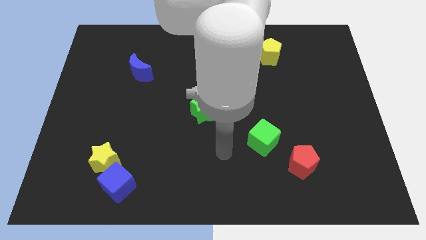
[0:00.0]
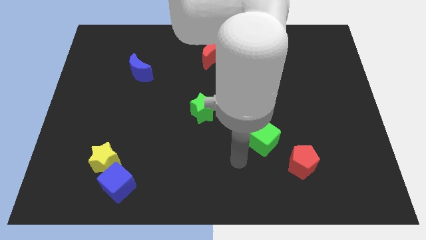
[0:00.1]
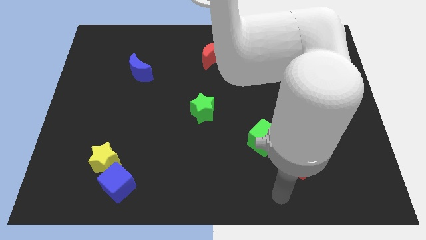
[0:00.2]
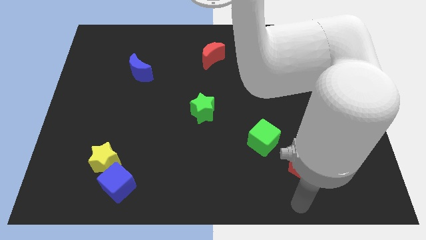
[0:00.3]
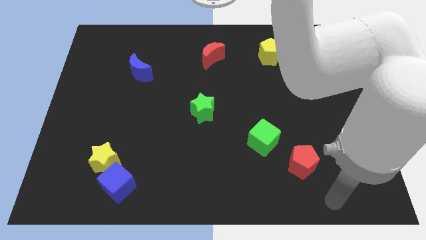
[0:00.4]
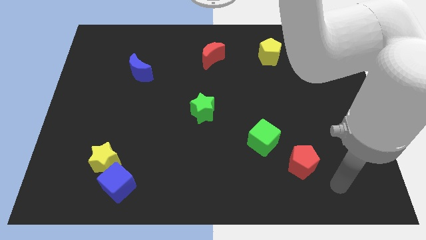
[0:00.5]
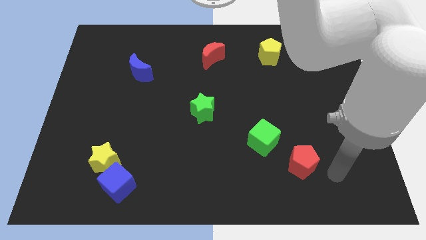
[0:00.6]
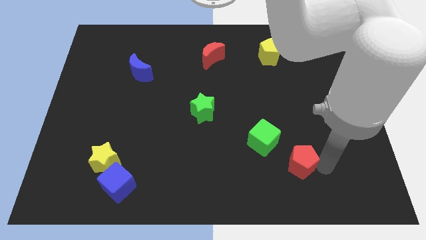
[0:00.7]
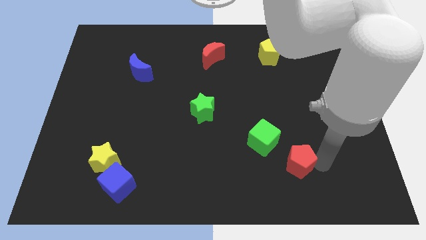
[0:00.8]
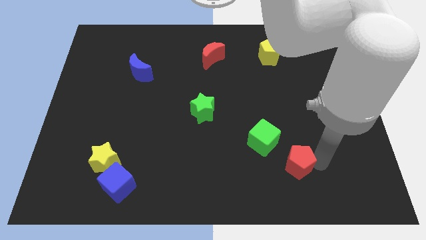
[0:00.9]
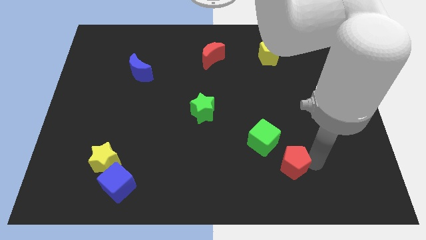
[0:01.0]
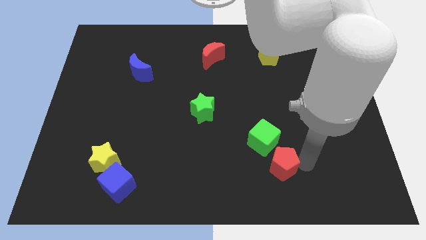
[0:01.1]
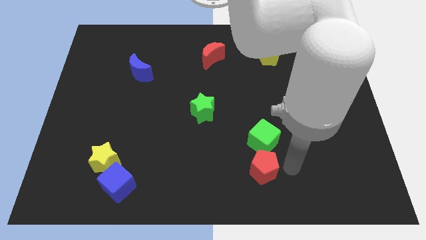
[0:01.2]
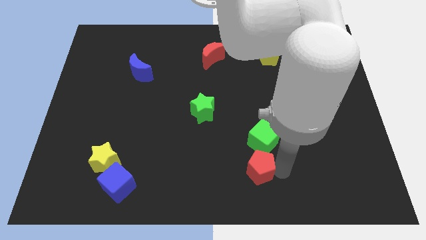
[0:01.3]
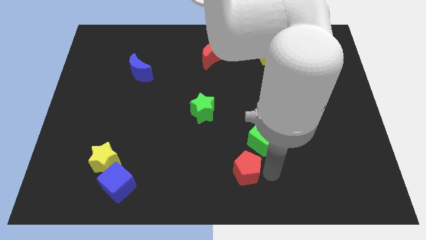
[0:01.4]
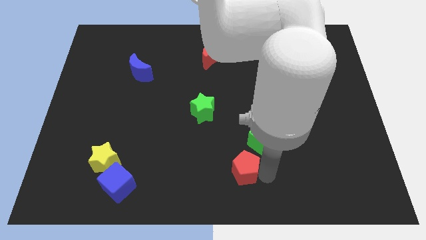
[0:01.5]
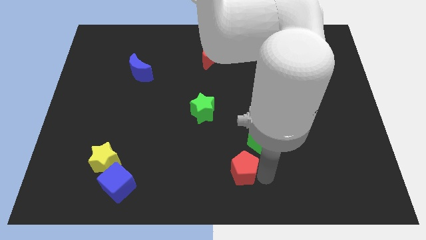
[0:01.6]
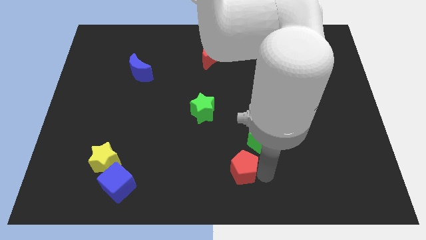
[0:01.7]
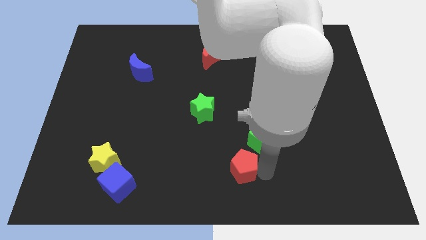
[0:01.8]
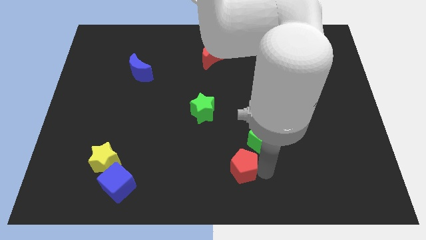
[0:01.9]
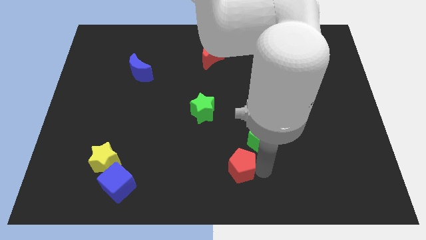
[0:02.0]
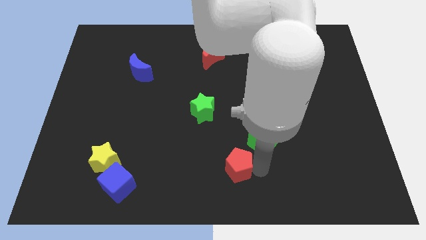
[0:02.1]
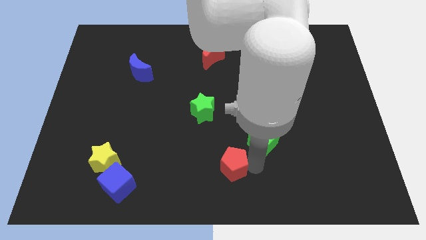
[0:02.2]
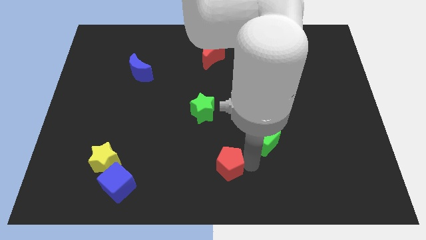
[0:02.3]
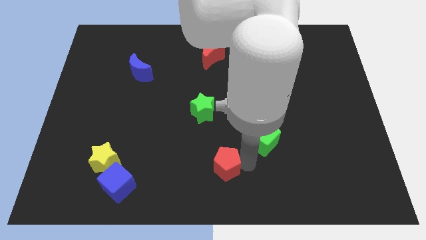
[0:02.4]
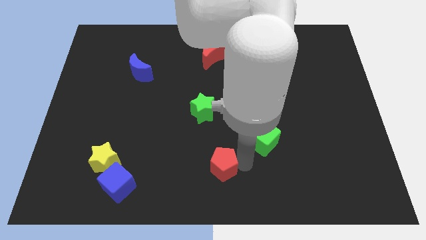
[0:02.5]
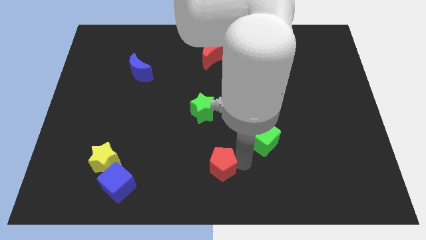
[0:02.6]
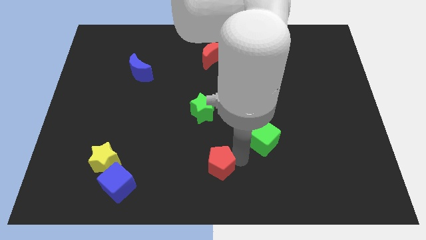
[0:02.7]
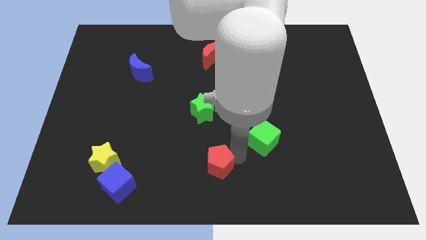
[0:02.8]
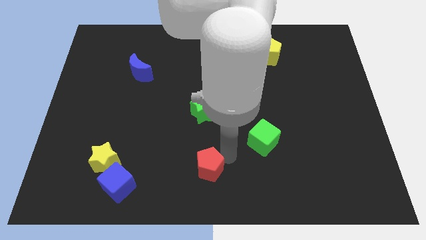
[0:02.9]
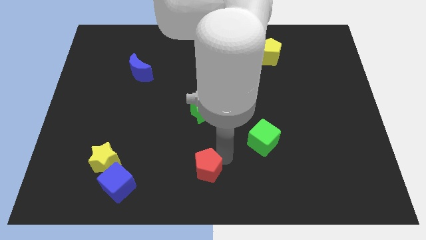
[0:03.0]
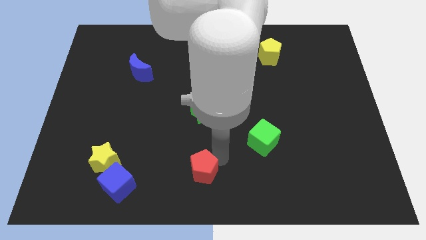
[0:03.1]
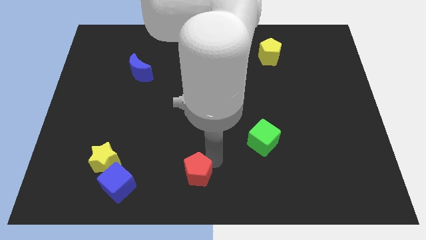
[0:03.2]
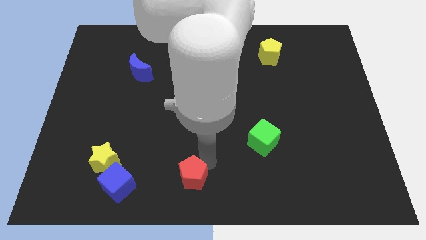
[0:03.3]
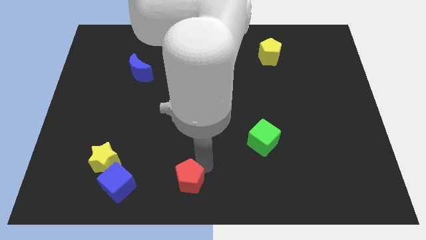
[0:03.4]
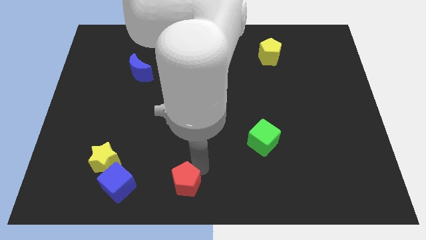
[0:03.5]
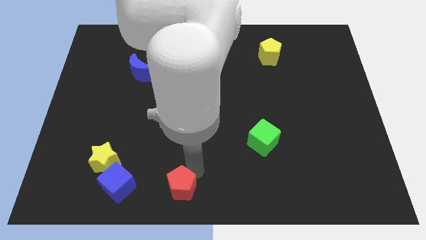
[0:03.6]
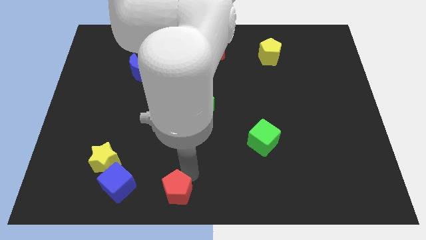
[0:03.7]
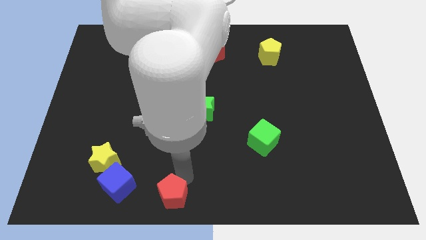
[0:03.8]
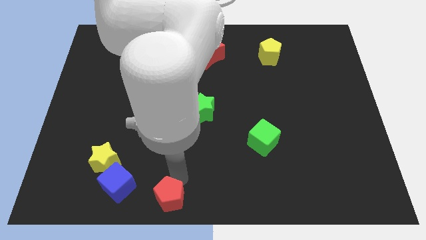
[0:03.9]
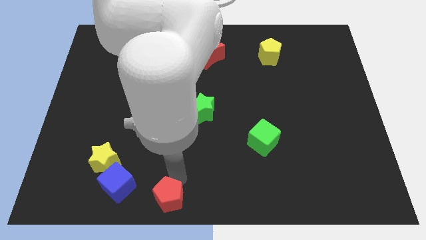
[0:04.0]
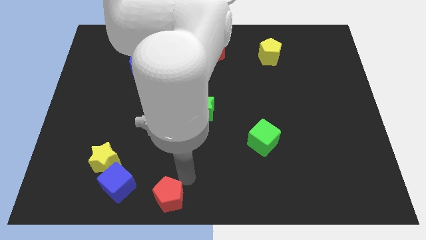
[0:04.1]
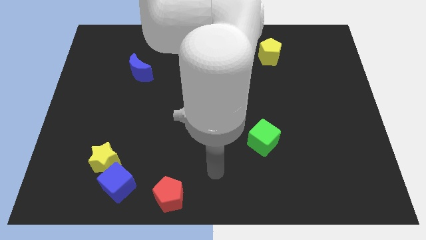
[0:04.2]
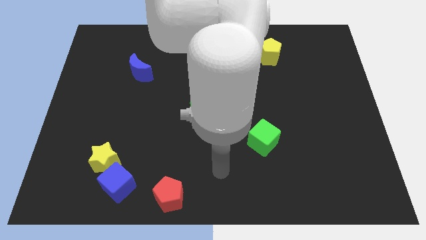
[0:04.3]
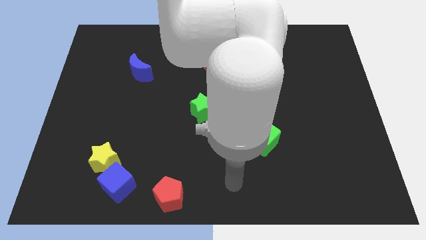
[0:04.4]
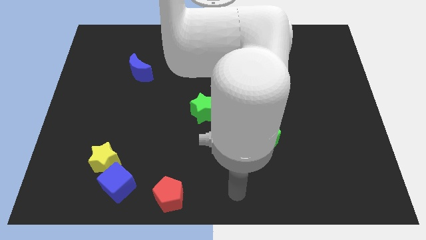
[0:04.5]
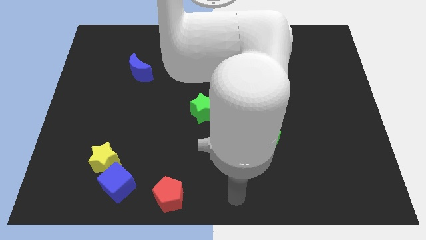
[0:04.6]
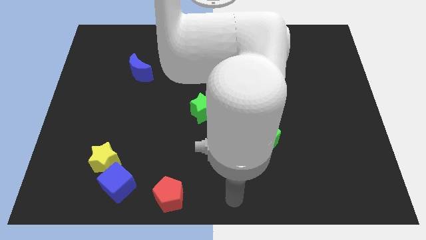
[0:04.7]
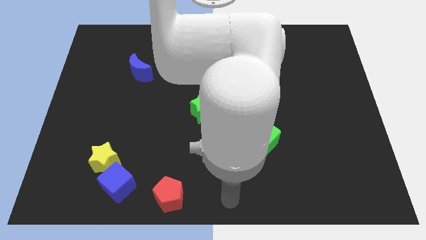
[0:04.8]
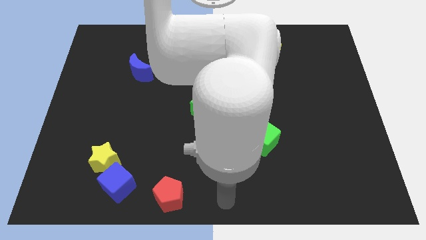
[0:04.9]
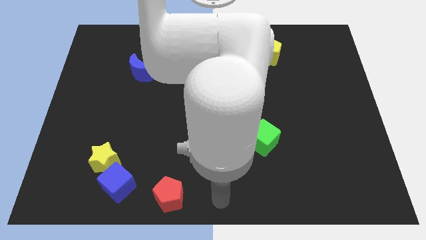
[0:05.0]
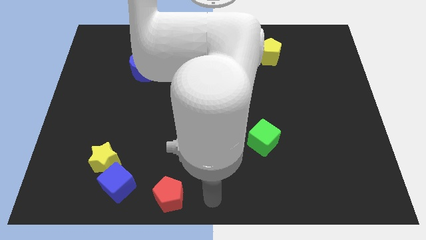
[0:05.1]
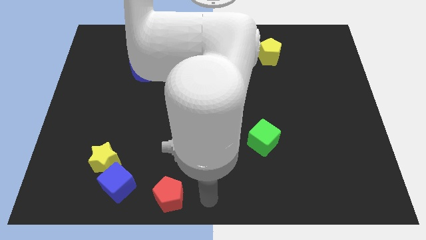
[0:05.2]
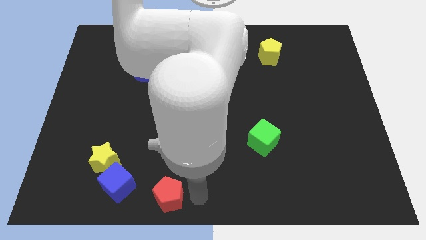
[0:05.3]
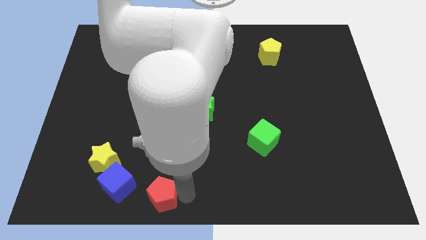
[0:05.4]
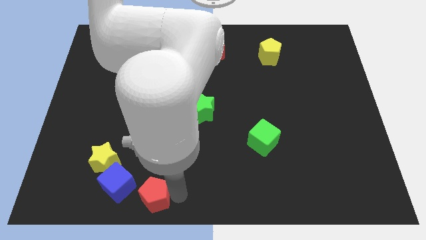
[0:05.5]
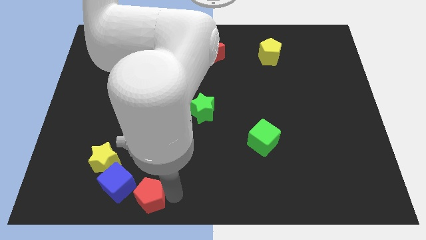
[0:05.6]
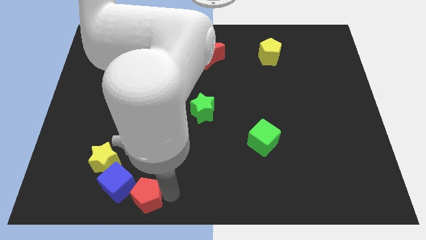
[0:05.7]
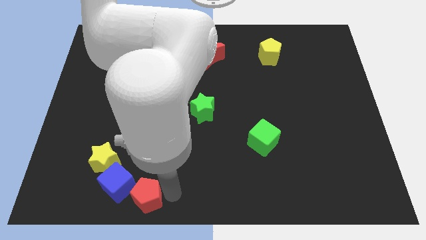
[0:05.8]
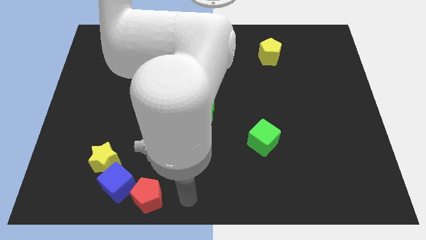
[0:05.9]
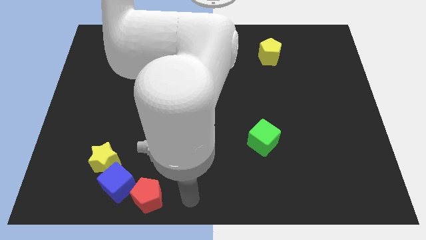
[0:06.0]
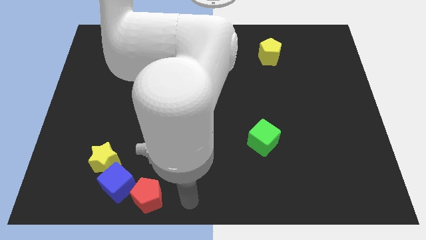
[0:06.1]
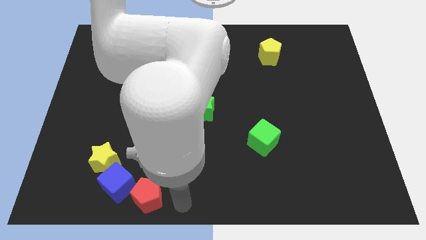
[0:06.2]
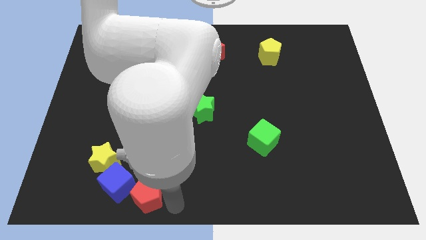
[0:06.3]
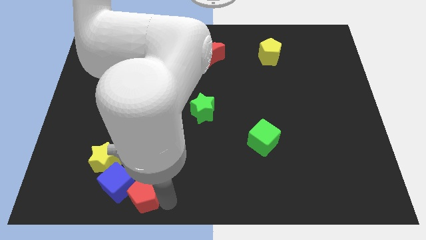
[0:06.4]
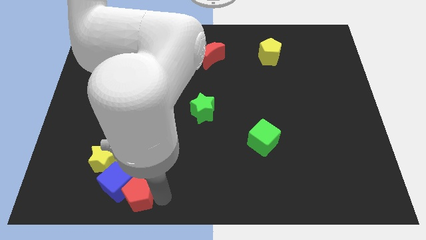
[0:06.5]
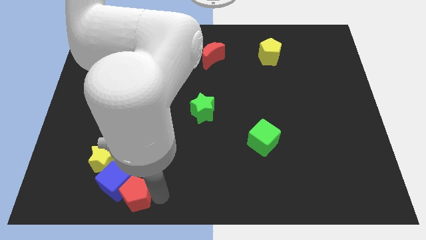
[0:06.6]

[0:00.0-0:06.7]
move the red pentagon next to the blue cube

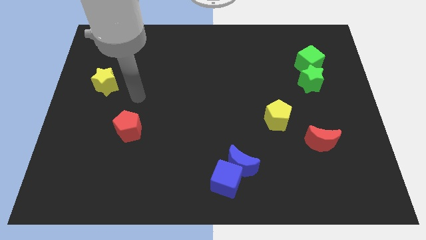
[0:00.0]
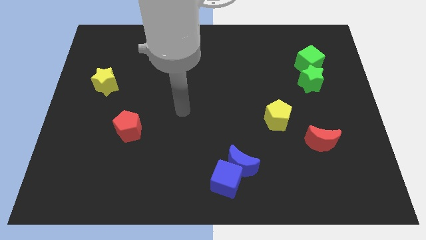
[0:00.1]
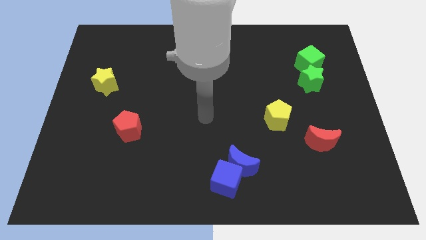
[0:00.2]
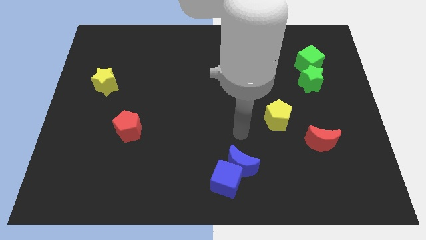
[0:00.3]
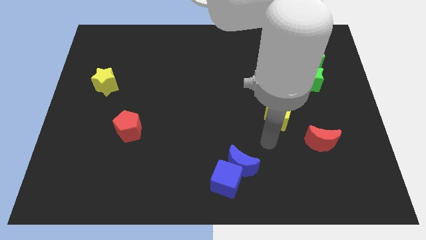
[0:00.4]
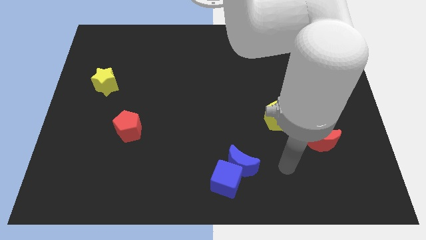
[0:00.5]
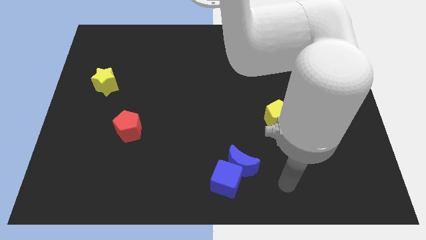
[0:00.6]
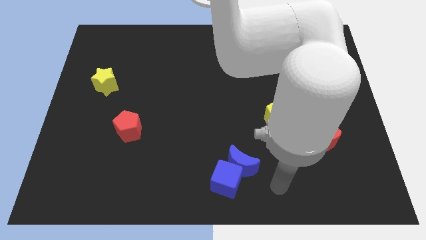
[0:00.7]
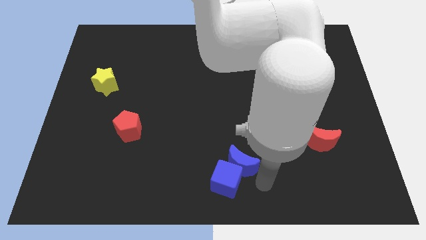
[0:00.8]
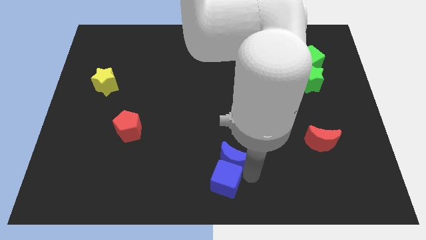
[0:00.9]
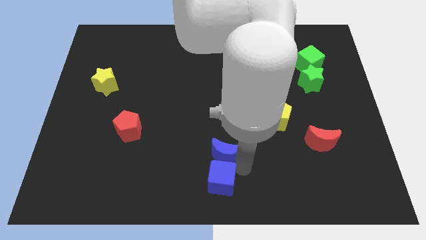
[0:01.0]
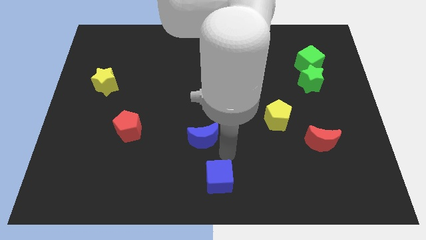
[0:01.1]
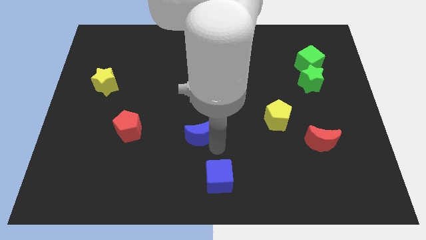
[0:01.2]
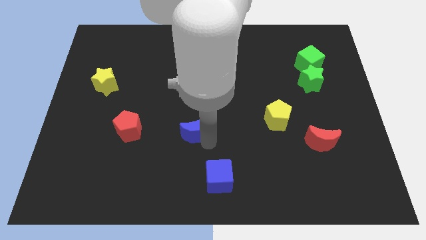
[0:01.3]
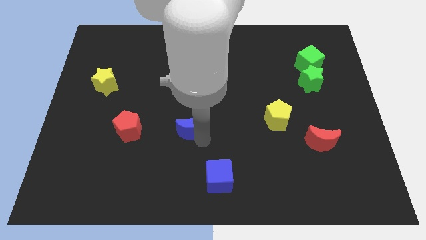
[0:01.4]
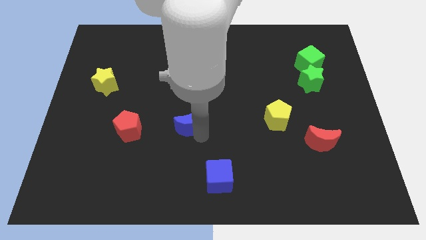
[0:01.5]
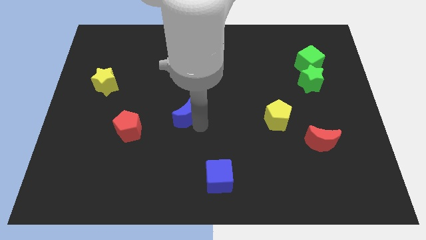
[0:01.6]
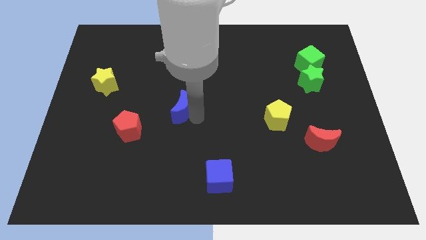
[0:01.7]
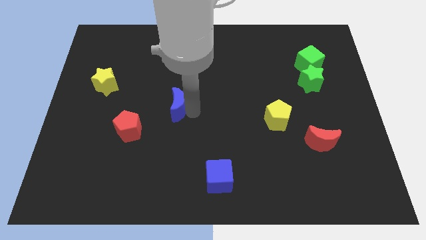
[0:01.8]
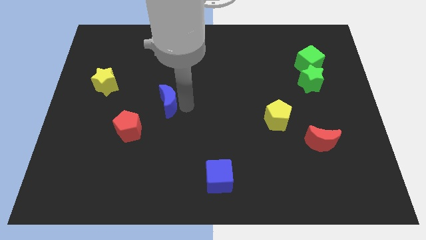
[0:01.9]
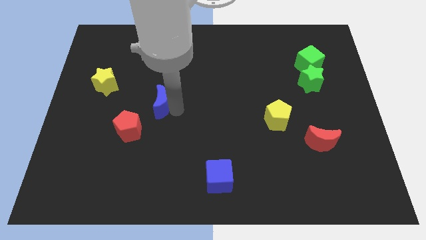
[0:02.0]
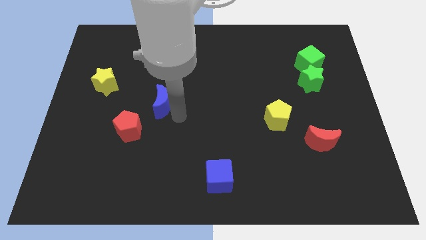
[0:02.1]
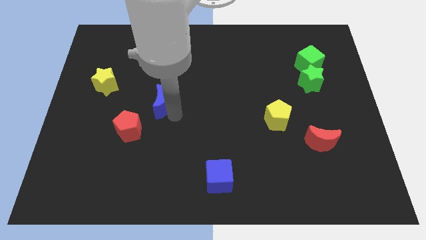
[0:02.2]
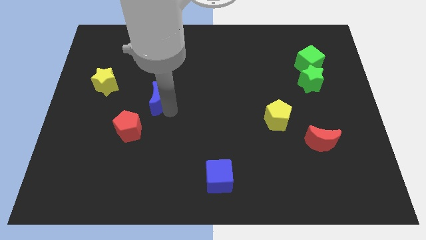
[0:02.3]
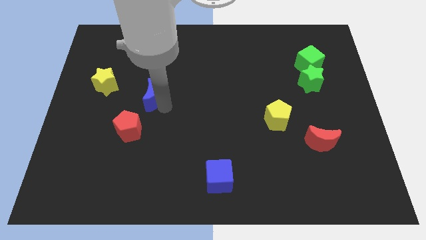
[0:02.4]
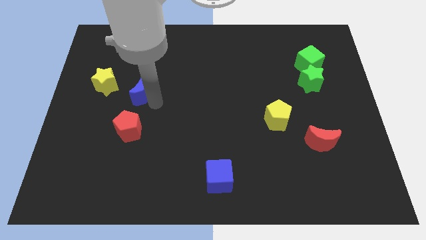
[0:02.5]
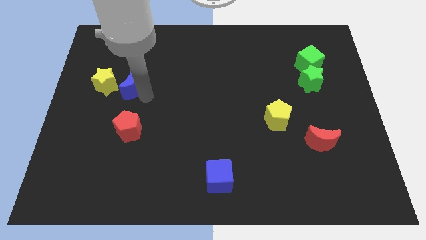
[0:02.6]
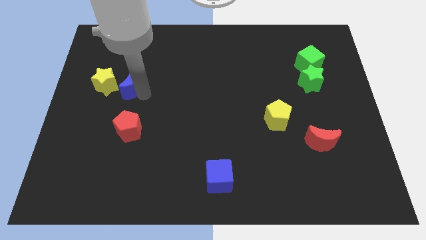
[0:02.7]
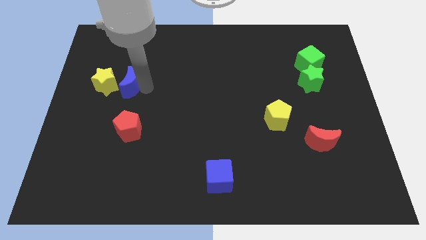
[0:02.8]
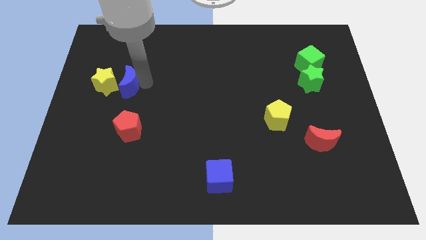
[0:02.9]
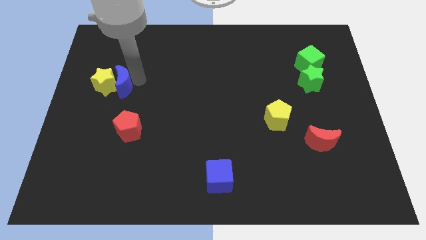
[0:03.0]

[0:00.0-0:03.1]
put the blue moon next to the yellow star
